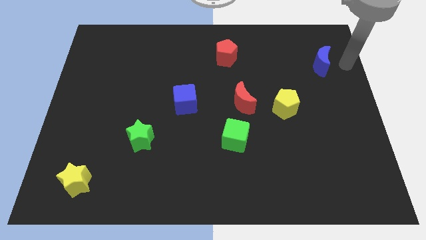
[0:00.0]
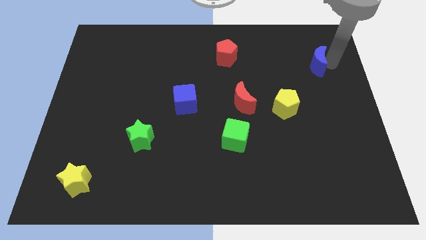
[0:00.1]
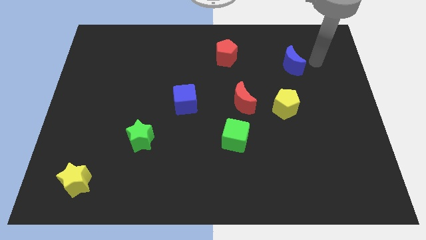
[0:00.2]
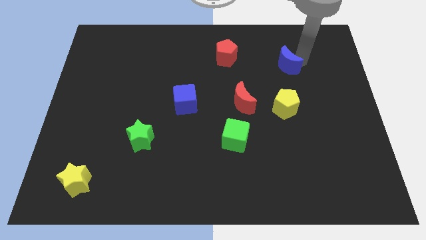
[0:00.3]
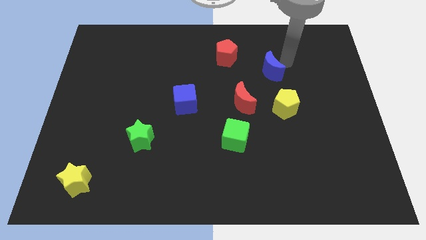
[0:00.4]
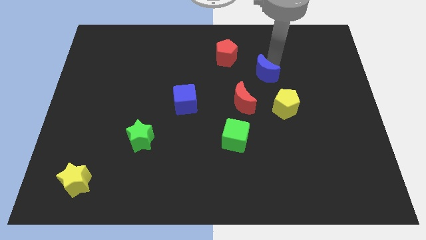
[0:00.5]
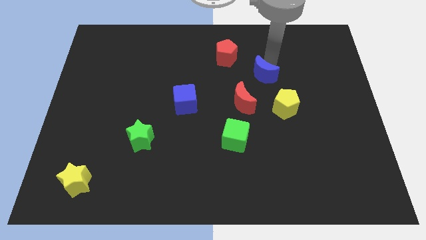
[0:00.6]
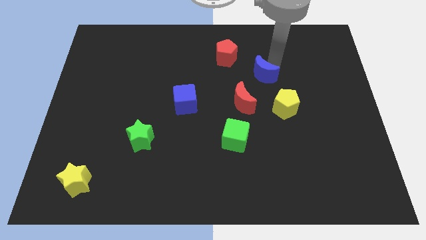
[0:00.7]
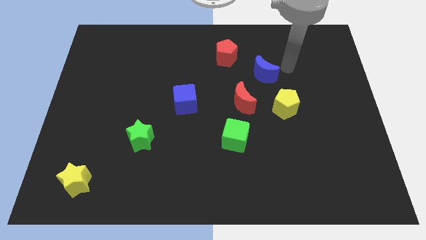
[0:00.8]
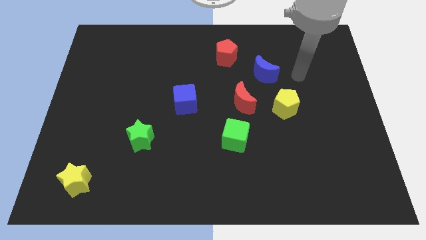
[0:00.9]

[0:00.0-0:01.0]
place the blue crescent ahead right to the red crescent

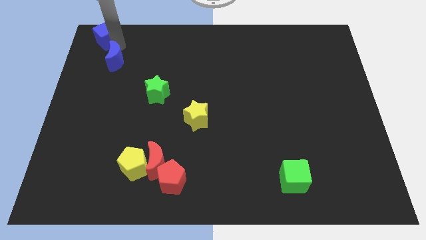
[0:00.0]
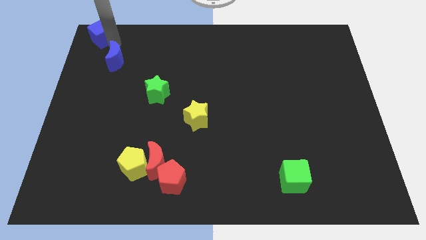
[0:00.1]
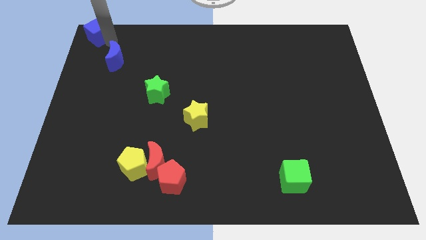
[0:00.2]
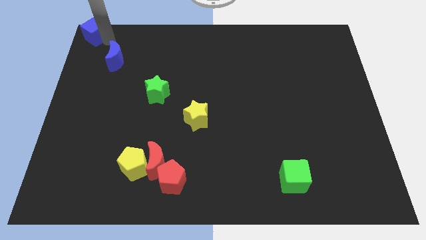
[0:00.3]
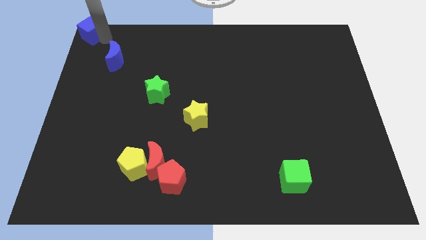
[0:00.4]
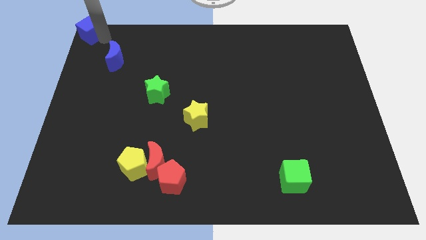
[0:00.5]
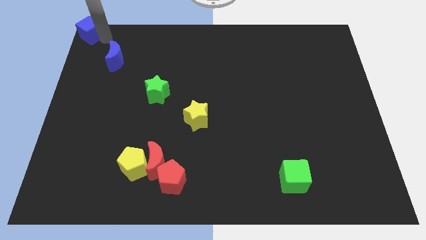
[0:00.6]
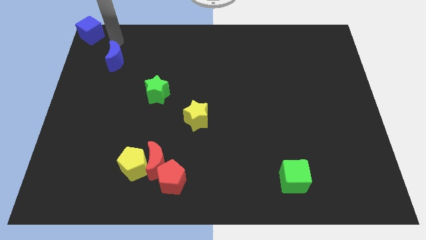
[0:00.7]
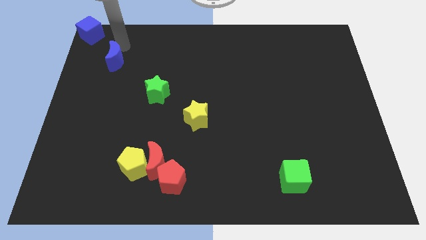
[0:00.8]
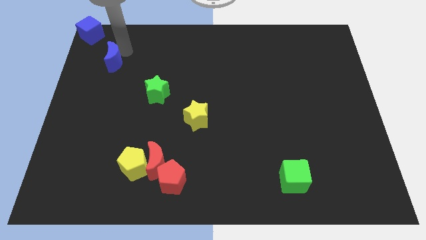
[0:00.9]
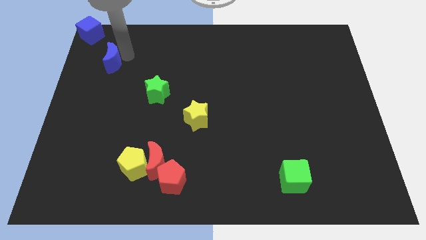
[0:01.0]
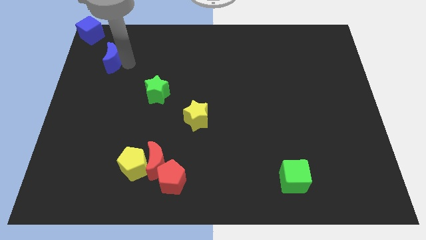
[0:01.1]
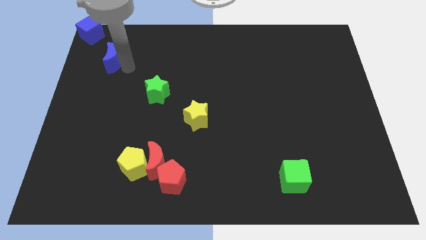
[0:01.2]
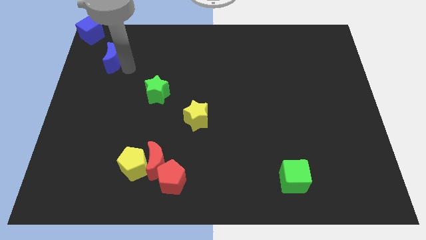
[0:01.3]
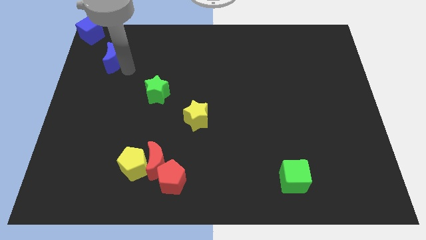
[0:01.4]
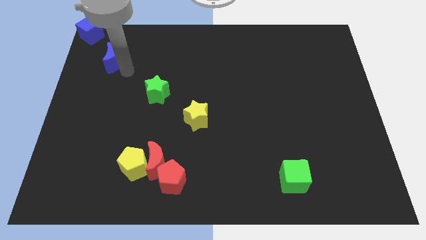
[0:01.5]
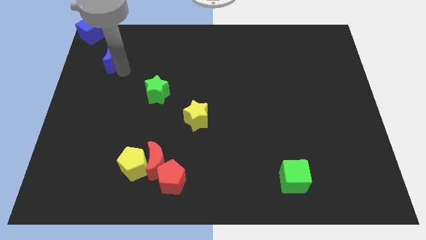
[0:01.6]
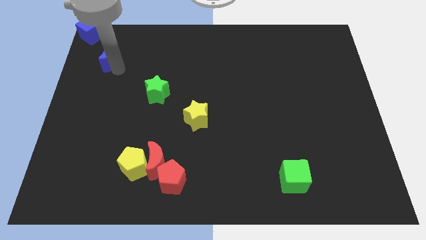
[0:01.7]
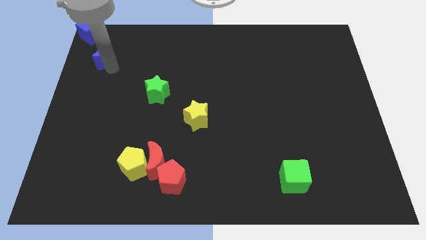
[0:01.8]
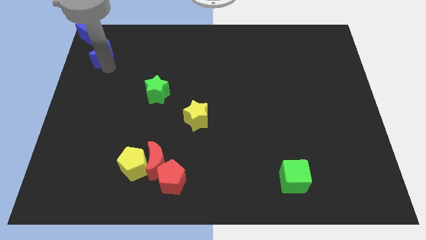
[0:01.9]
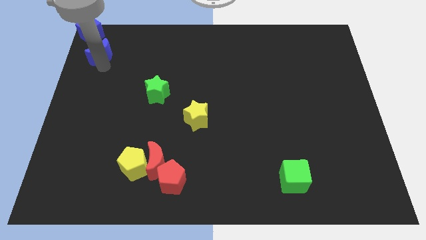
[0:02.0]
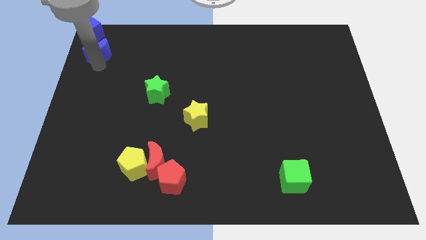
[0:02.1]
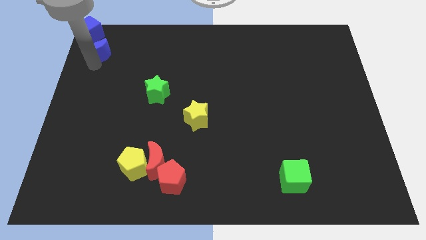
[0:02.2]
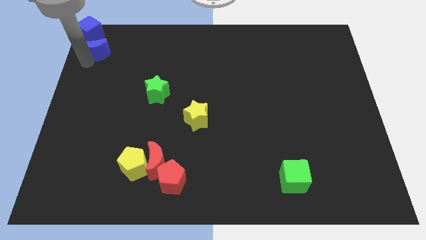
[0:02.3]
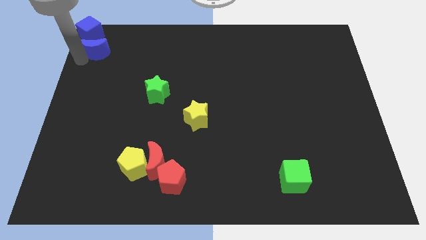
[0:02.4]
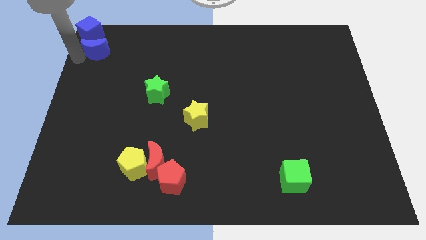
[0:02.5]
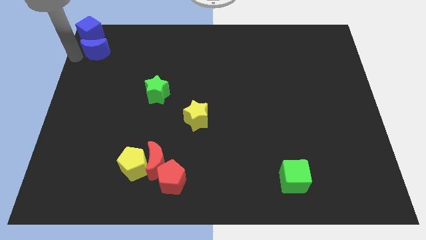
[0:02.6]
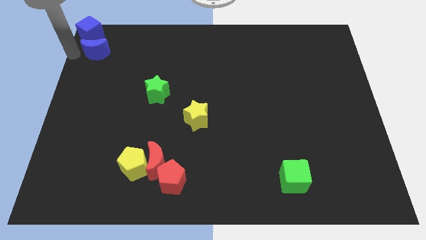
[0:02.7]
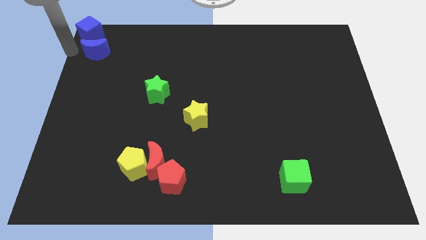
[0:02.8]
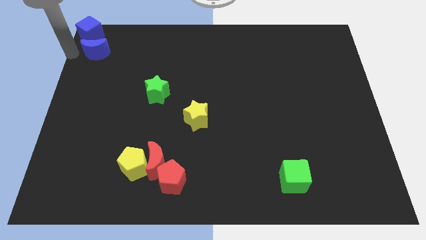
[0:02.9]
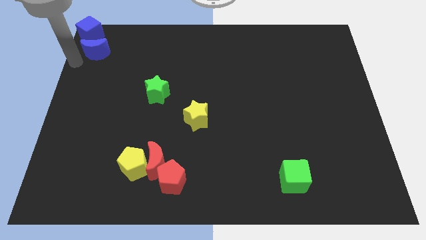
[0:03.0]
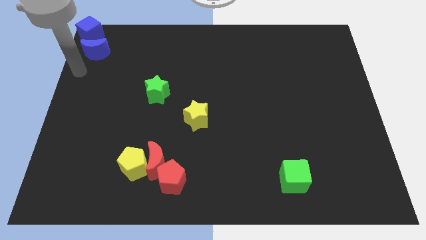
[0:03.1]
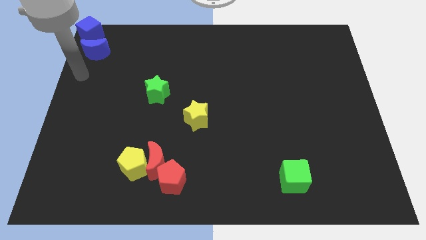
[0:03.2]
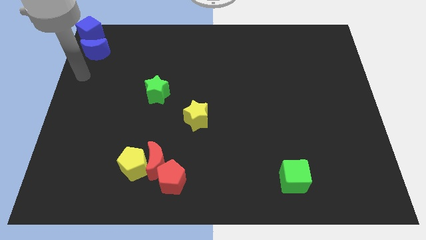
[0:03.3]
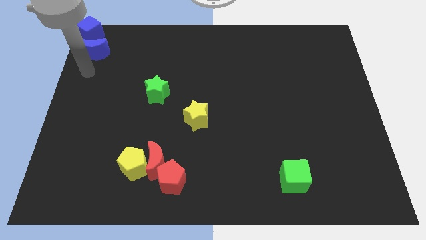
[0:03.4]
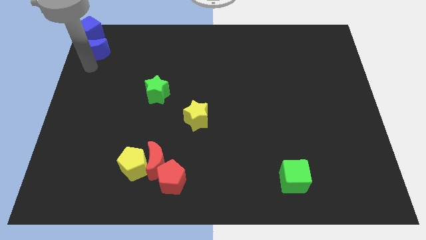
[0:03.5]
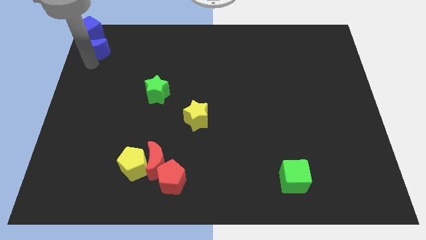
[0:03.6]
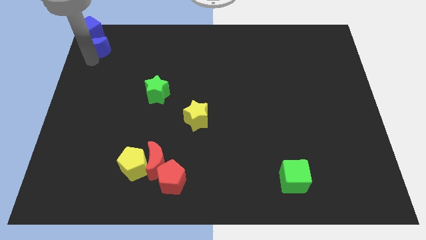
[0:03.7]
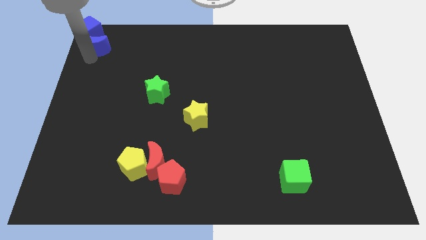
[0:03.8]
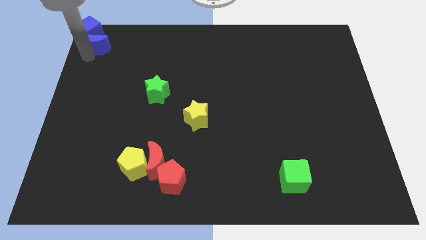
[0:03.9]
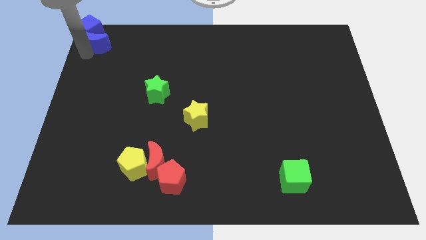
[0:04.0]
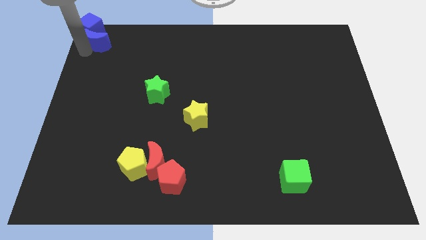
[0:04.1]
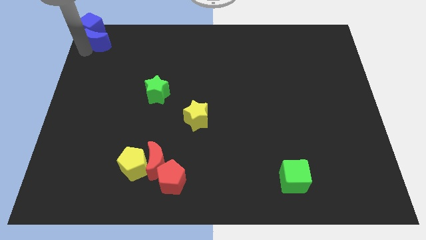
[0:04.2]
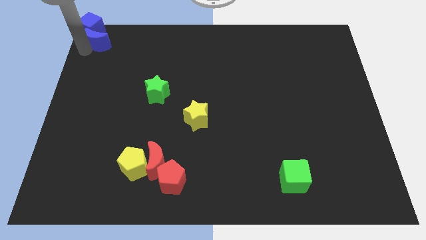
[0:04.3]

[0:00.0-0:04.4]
push the blue moon into the blue cube

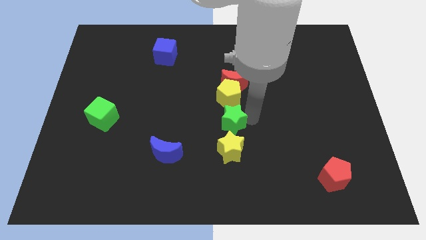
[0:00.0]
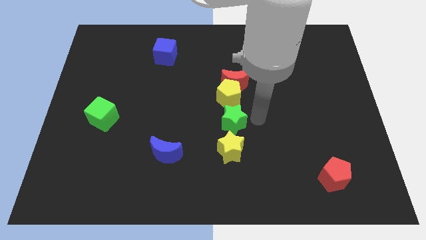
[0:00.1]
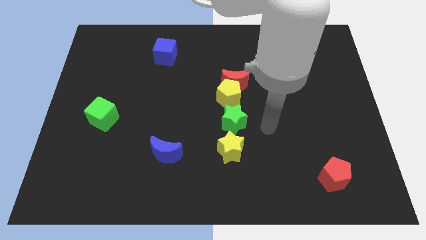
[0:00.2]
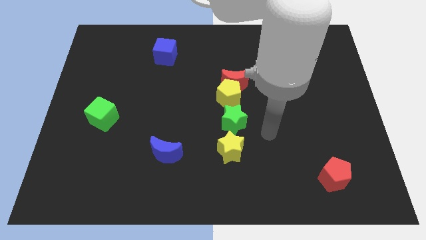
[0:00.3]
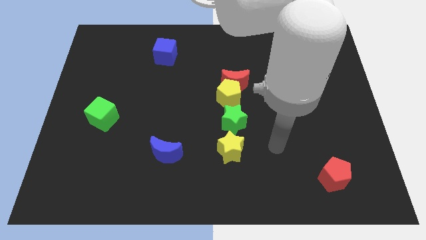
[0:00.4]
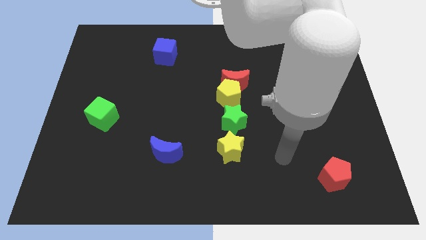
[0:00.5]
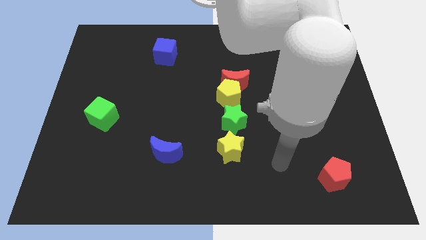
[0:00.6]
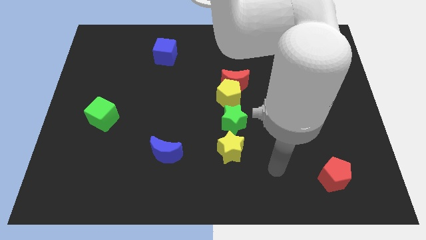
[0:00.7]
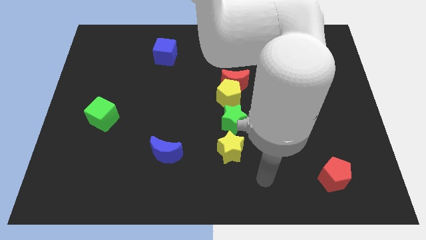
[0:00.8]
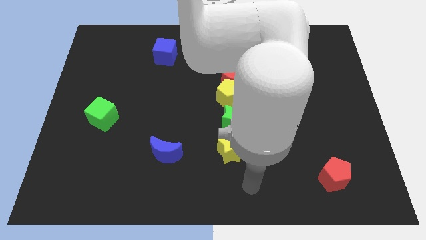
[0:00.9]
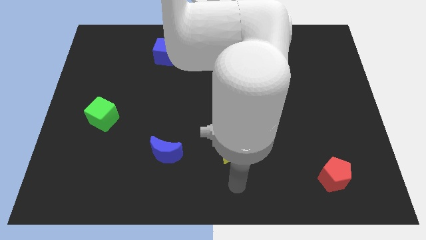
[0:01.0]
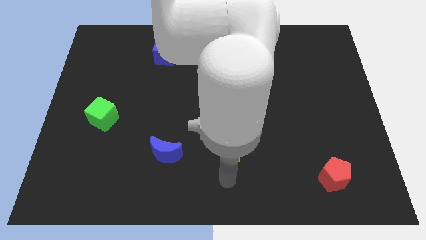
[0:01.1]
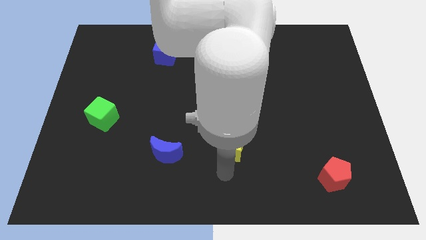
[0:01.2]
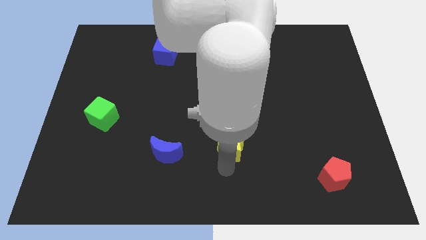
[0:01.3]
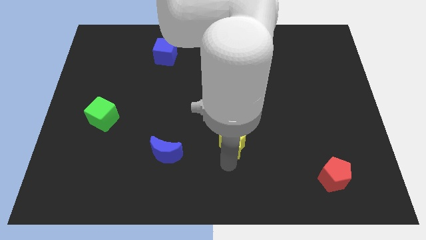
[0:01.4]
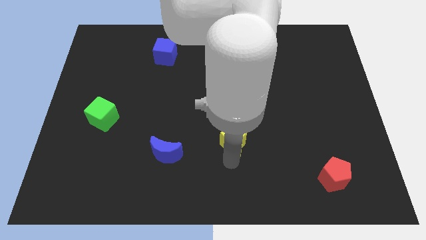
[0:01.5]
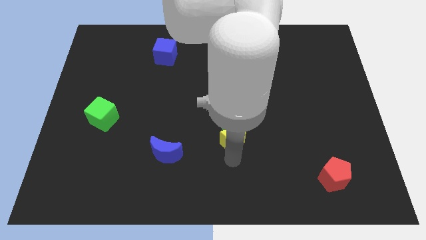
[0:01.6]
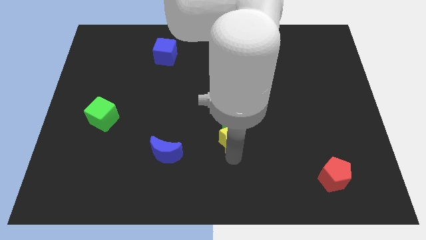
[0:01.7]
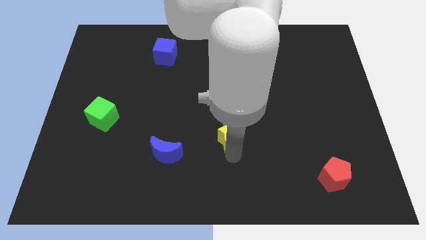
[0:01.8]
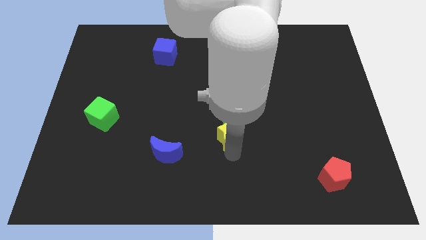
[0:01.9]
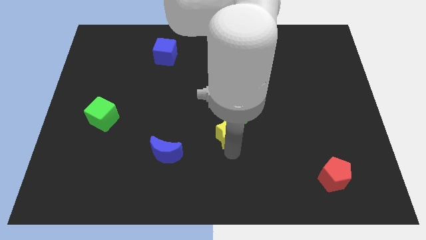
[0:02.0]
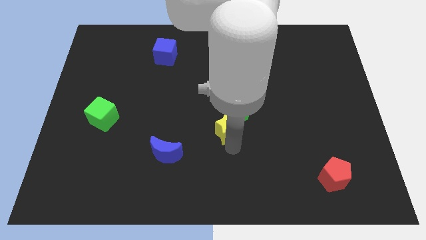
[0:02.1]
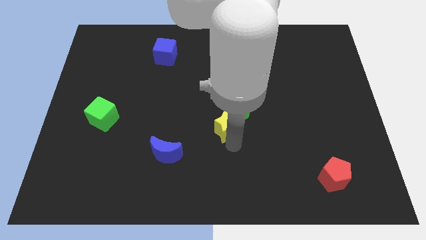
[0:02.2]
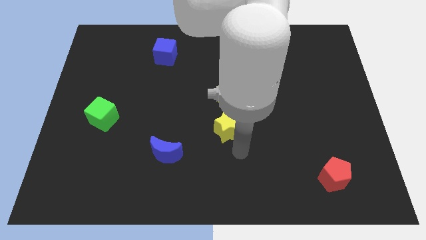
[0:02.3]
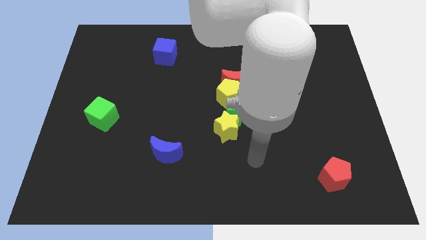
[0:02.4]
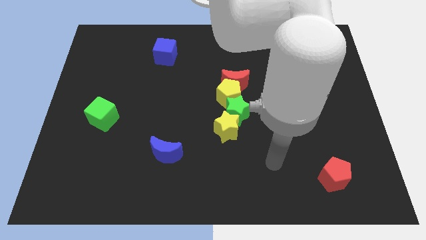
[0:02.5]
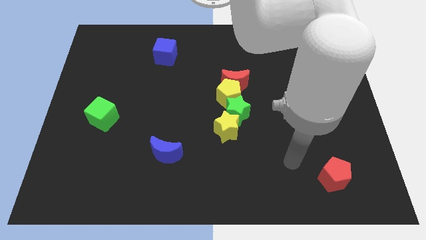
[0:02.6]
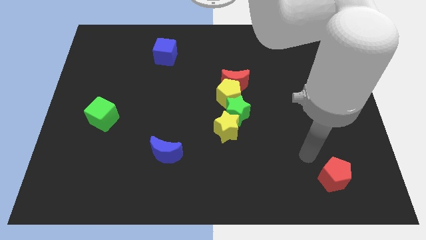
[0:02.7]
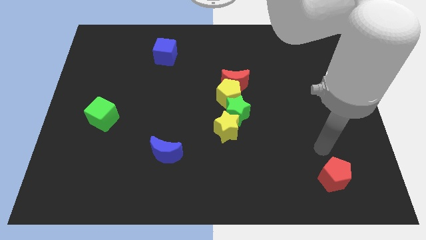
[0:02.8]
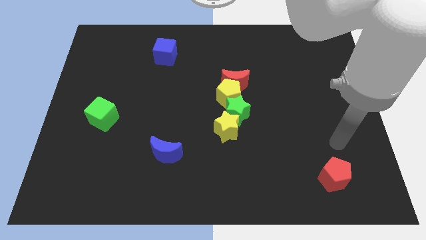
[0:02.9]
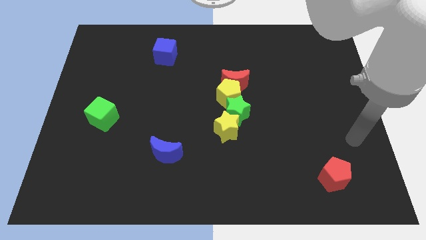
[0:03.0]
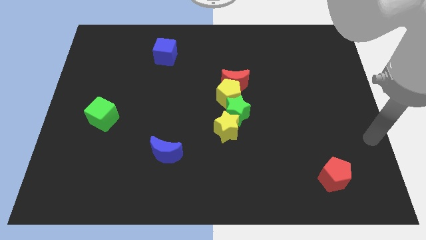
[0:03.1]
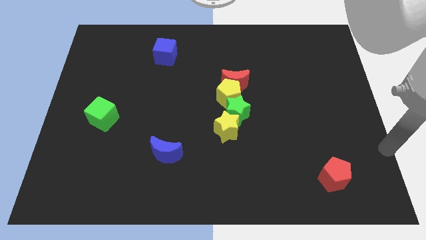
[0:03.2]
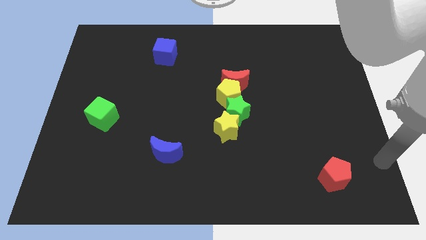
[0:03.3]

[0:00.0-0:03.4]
push the yellow star into the green star

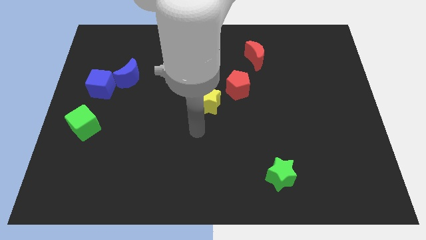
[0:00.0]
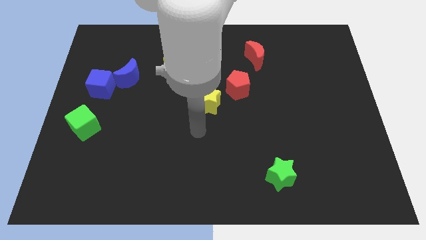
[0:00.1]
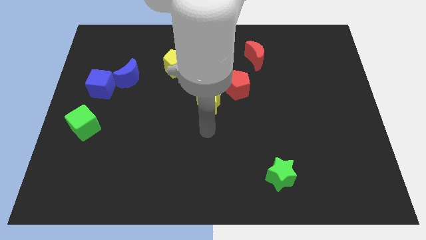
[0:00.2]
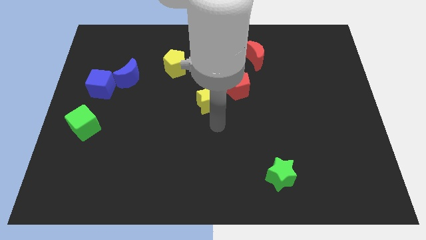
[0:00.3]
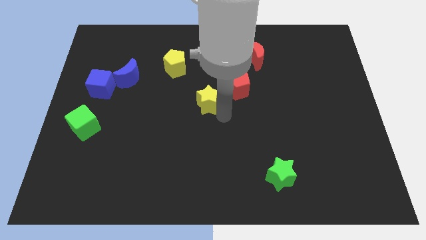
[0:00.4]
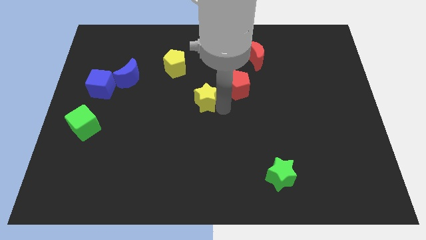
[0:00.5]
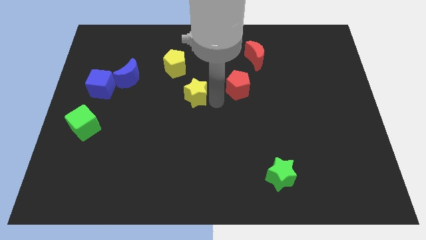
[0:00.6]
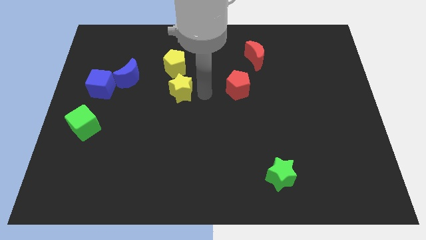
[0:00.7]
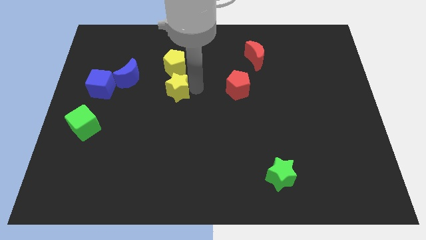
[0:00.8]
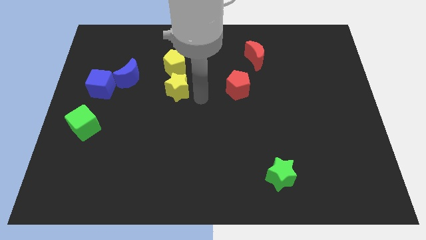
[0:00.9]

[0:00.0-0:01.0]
place the yellow star parallel to the red pentagon
